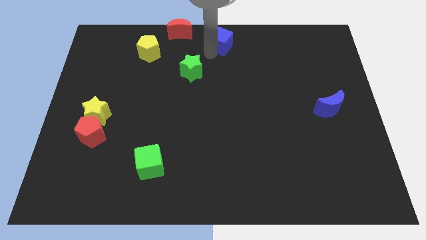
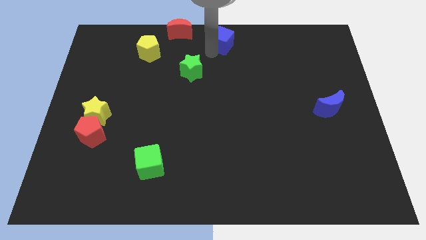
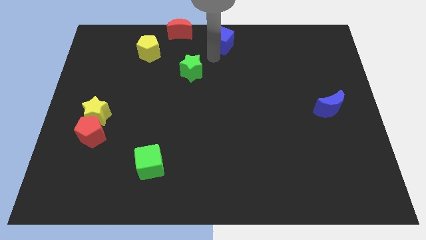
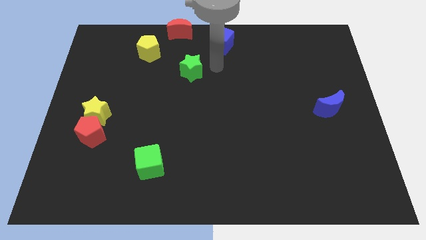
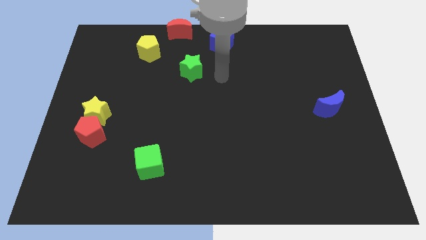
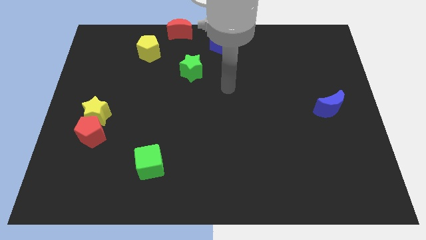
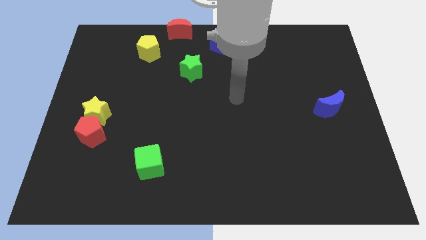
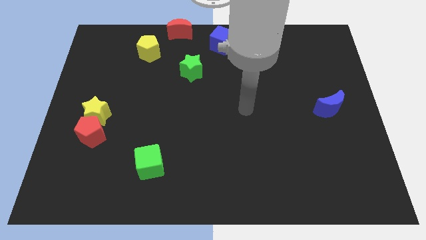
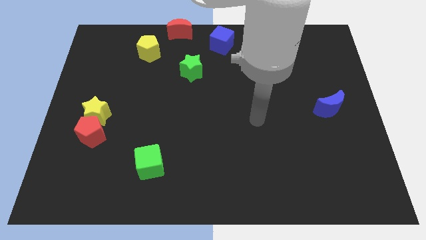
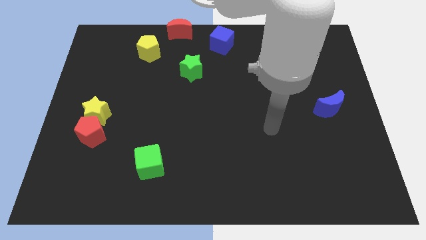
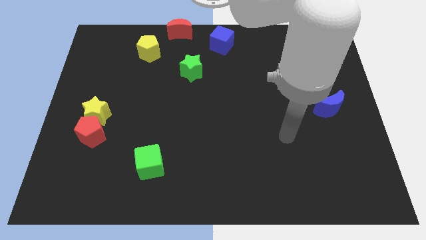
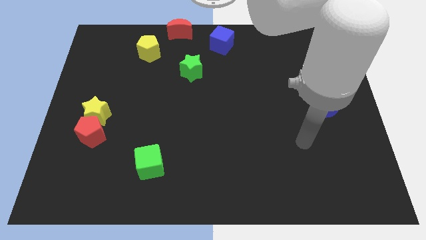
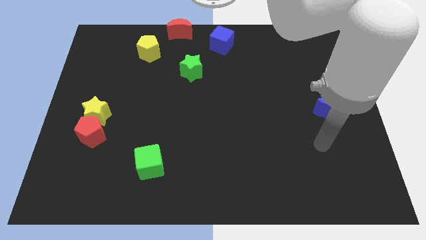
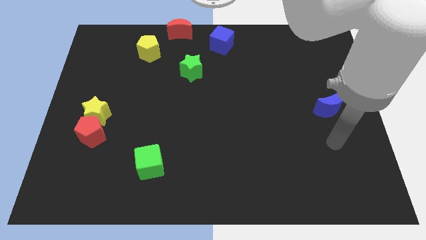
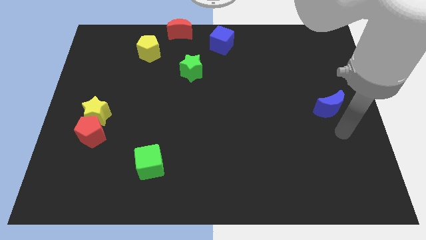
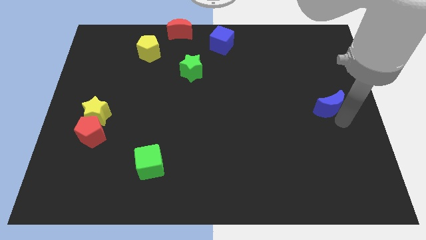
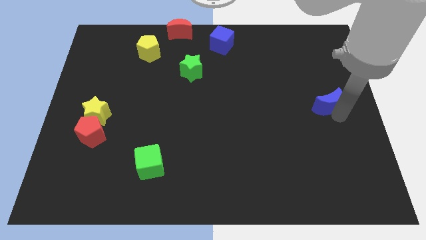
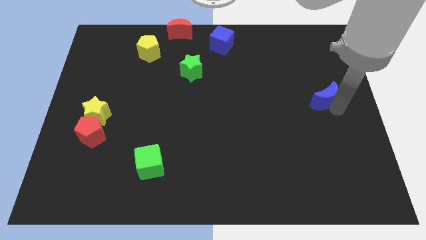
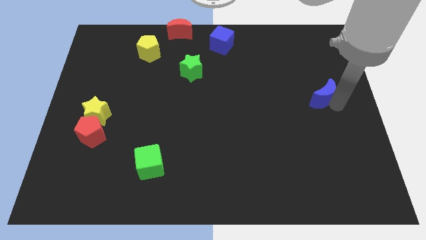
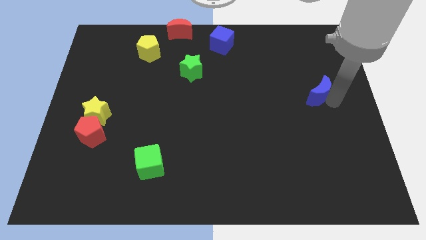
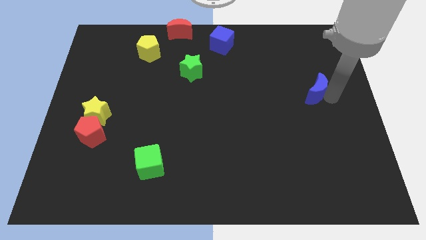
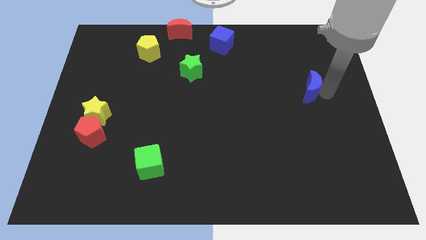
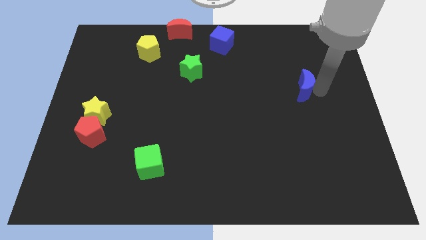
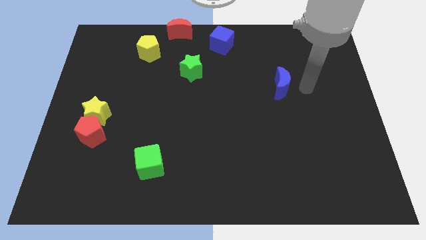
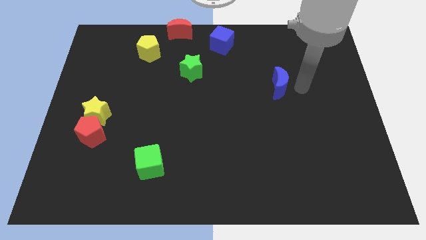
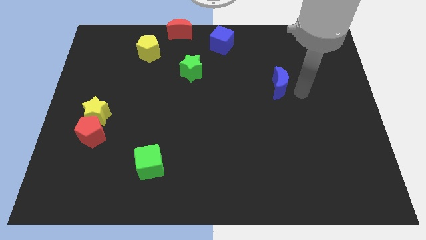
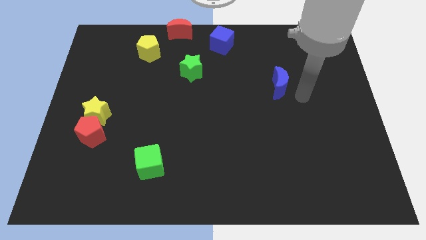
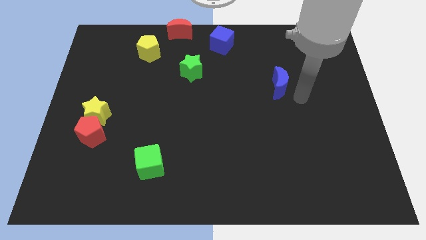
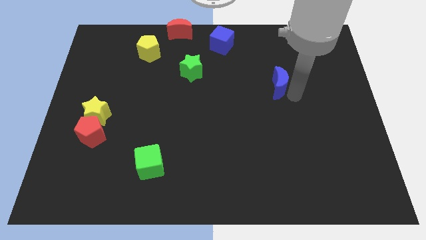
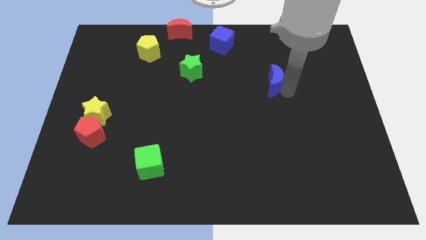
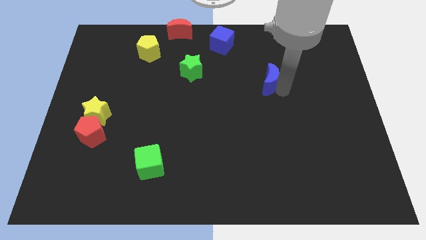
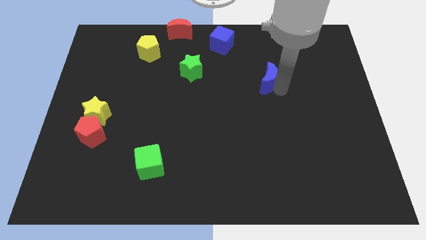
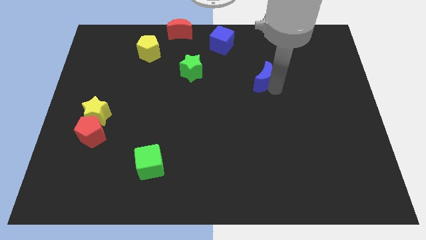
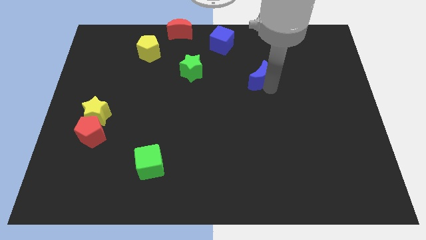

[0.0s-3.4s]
move the blue crescent upwards

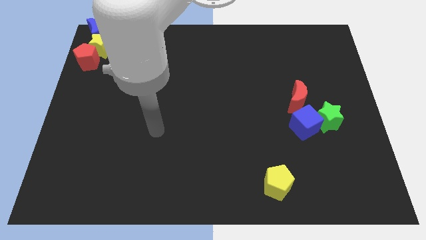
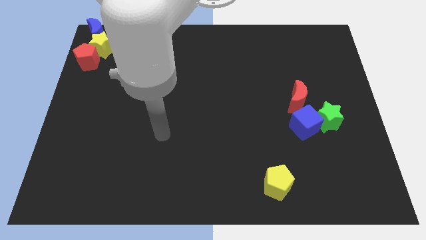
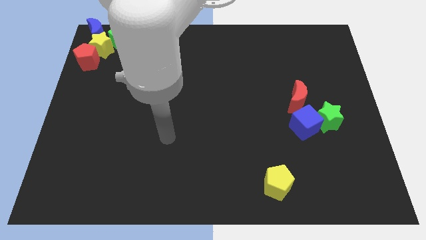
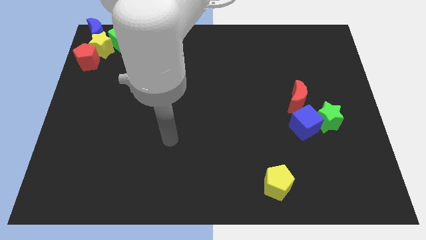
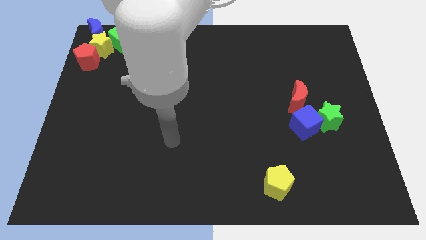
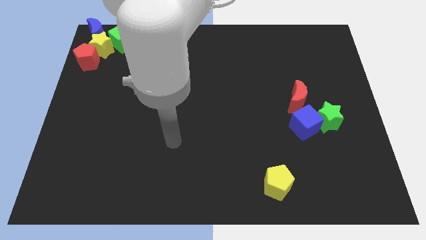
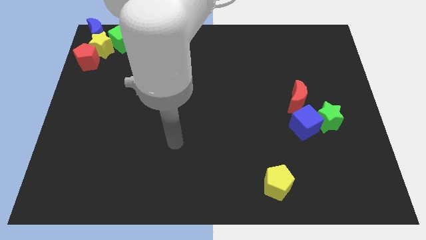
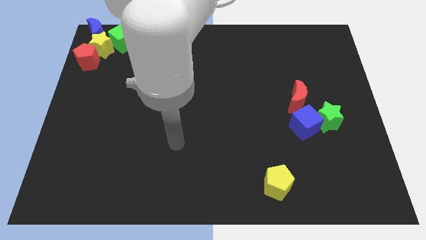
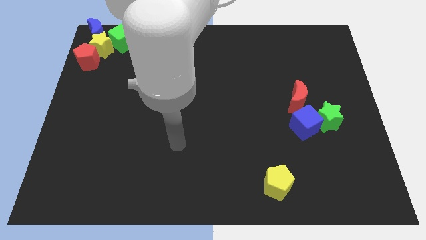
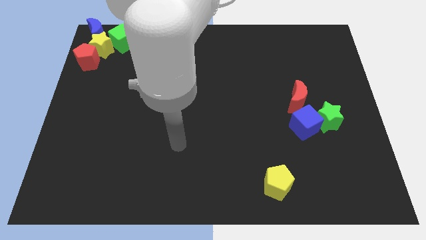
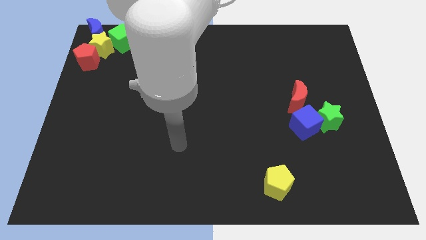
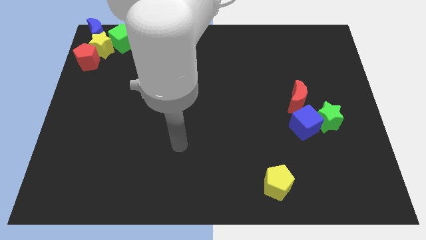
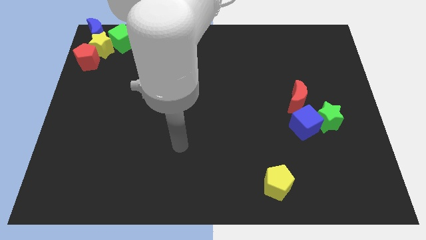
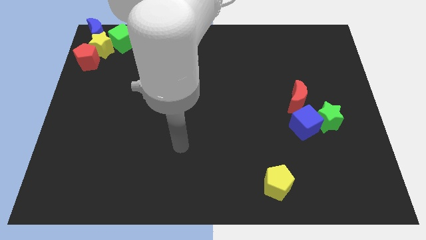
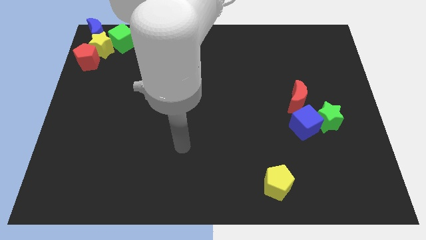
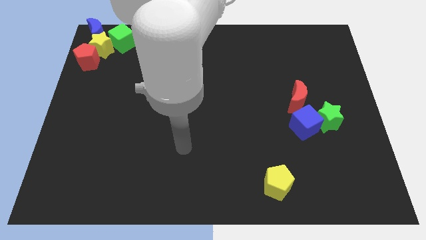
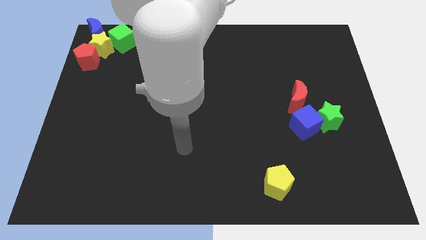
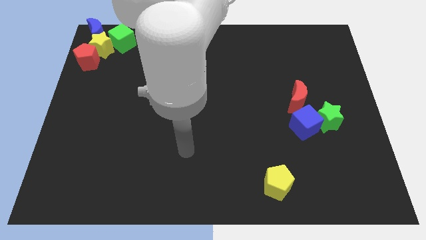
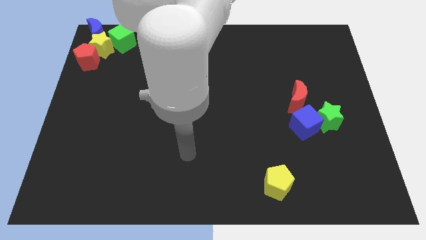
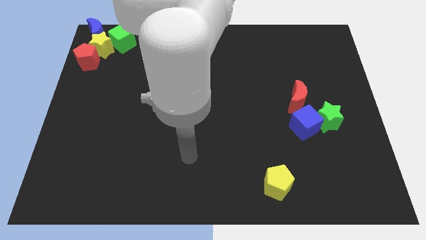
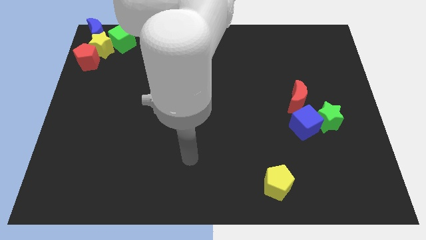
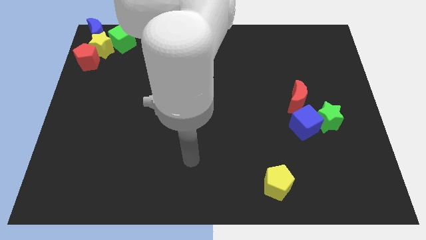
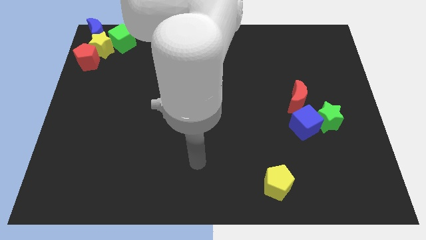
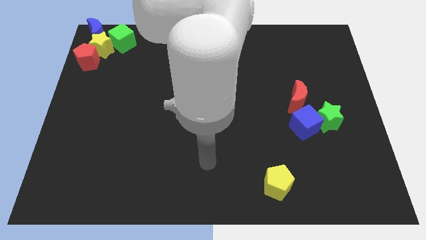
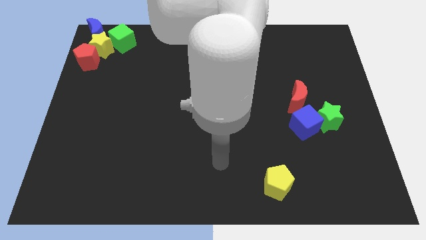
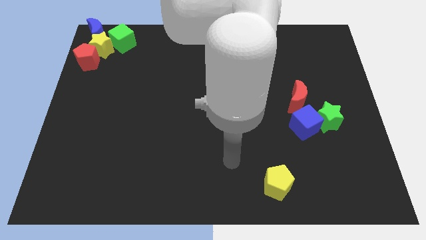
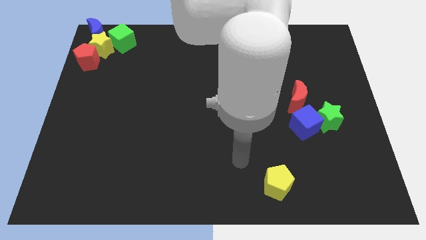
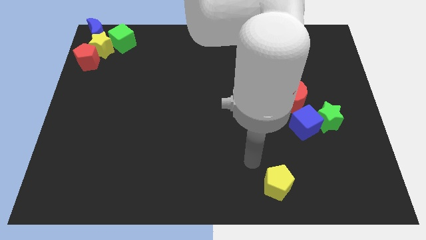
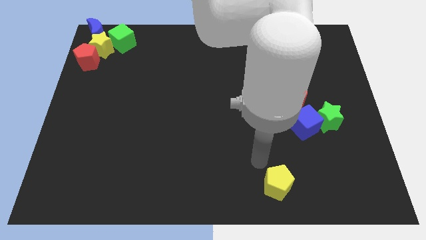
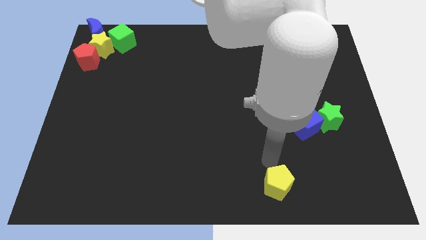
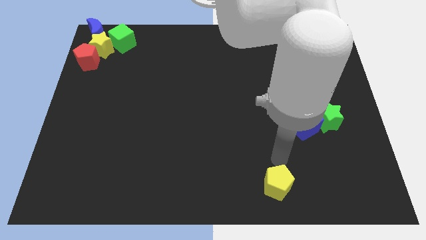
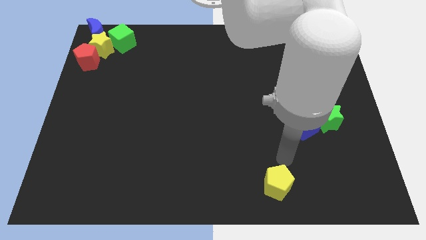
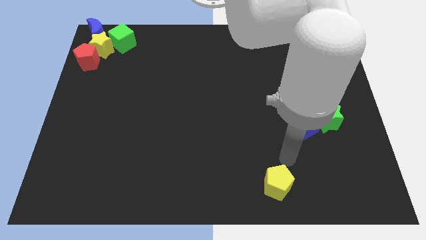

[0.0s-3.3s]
move the arm to the top of the yellow pentagon

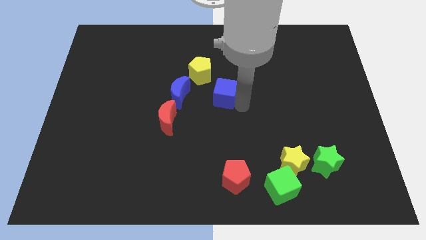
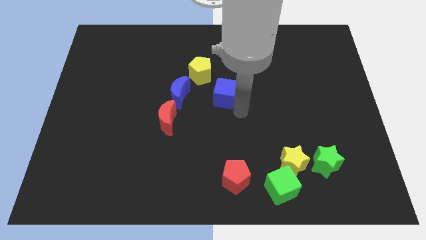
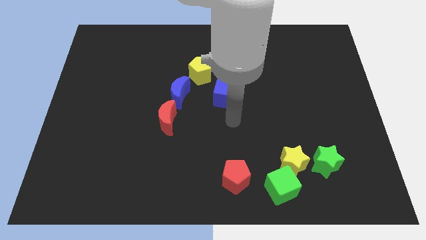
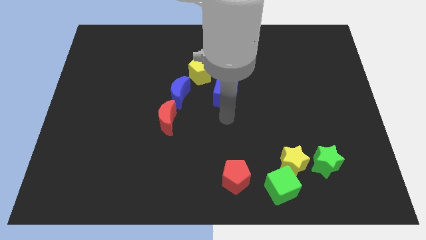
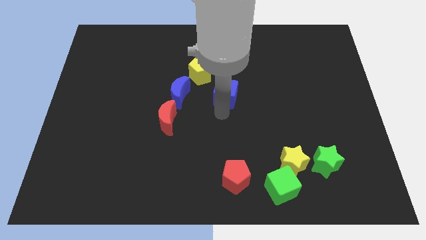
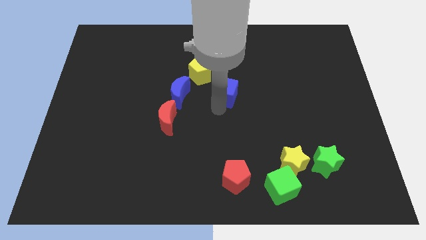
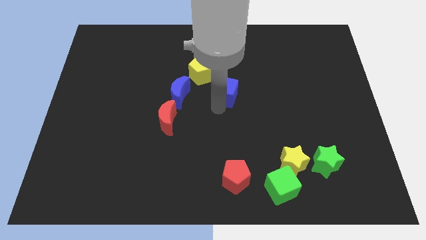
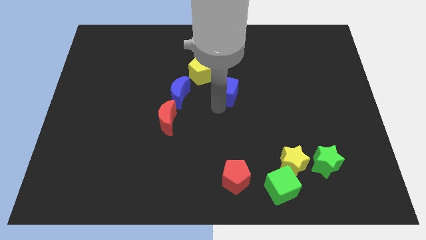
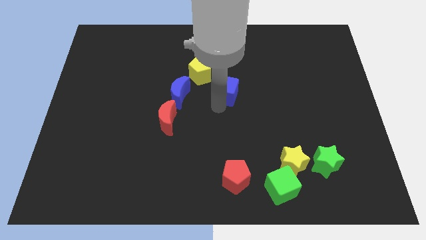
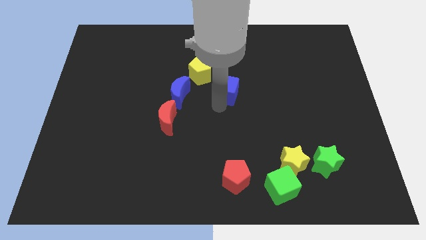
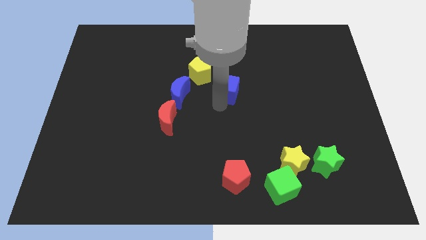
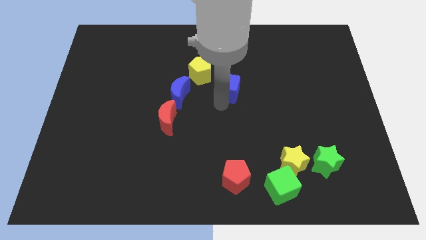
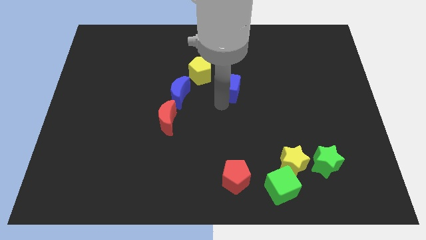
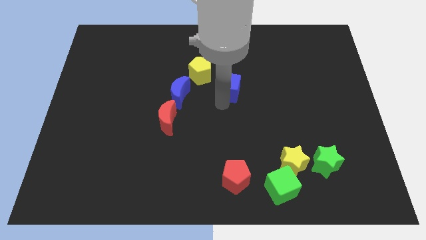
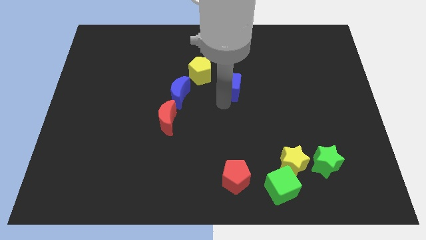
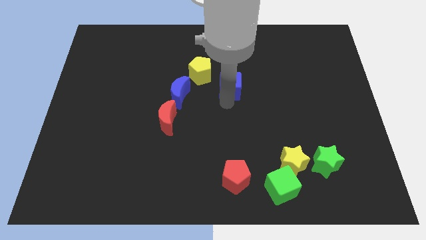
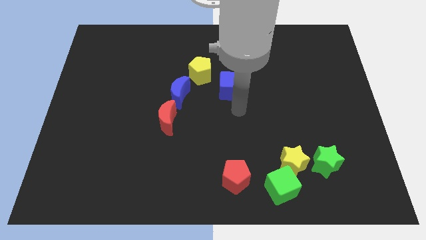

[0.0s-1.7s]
place blue cube diagonally to the yellow pentagon

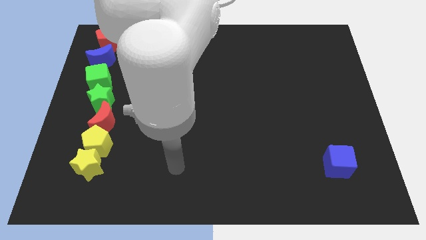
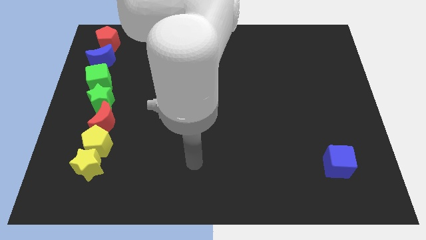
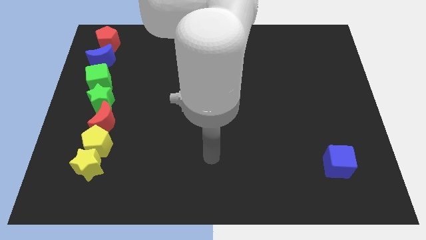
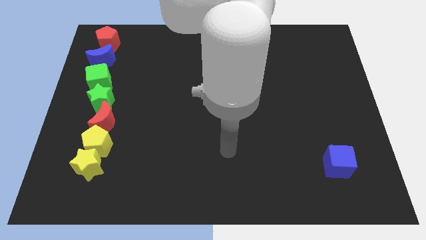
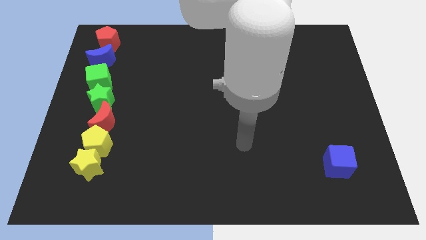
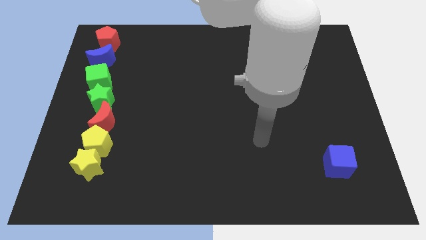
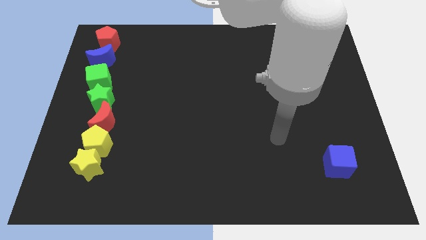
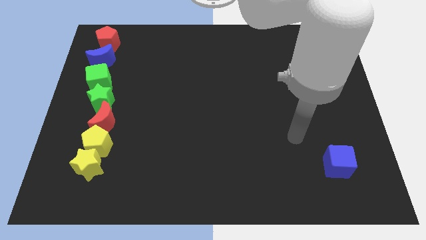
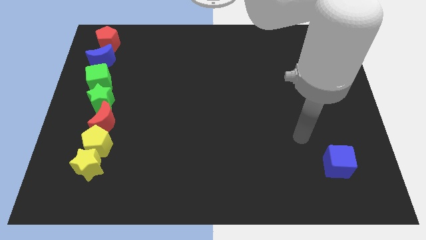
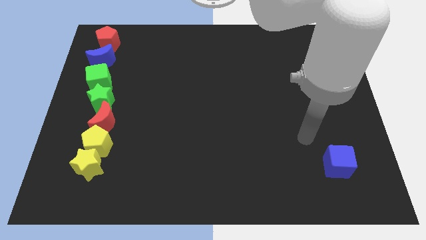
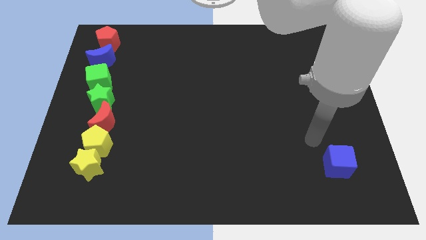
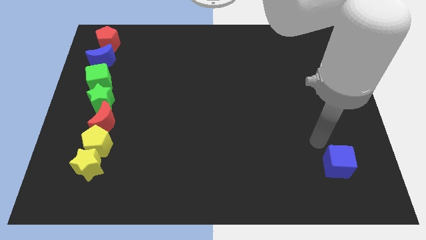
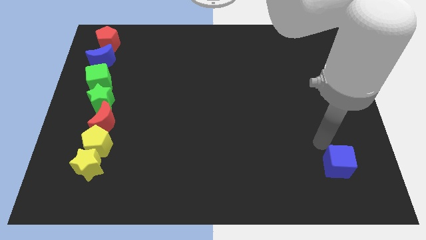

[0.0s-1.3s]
place your arm at the top left side of blue cube
